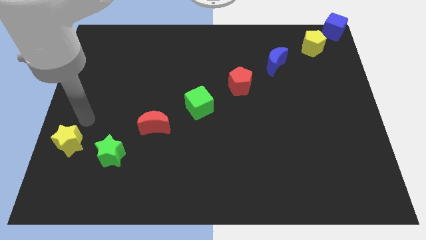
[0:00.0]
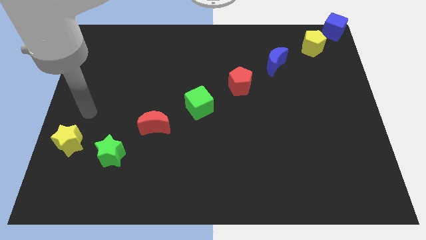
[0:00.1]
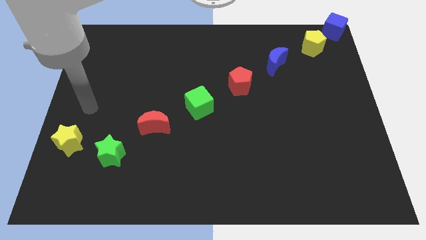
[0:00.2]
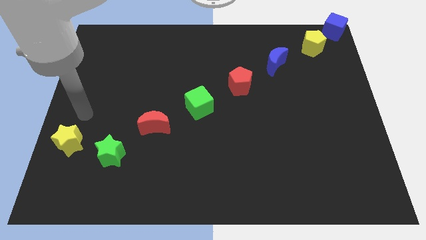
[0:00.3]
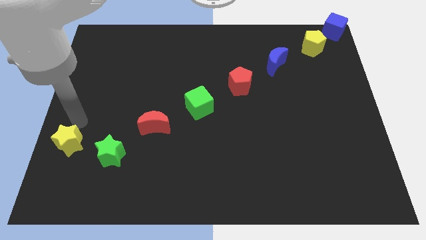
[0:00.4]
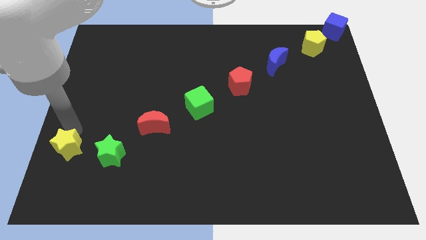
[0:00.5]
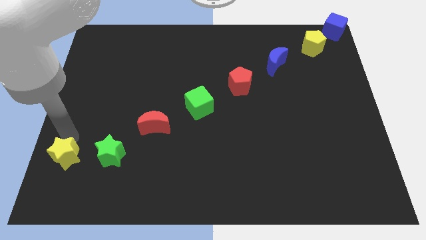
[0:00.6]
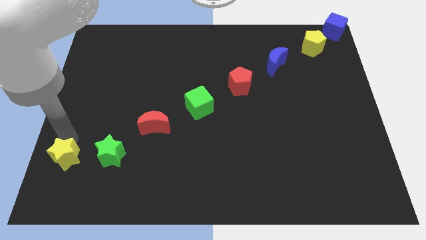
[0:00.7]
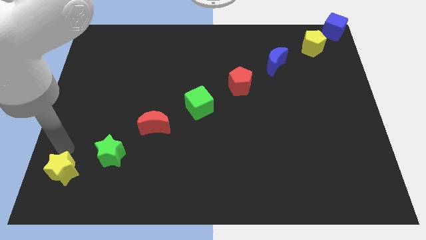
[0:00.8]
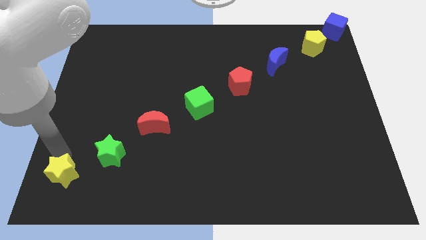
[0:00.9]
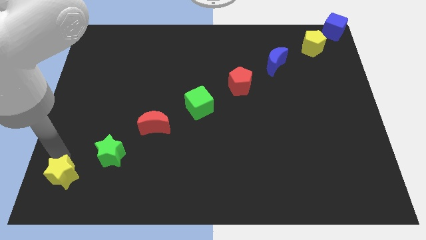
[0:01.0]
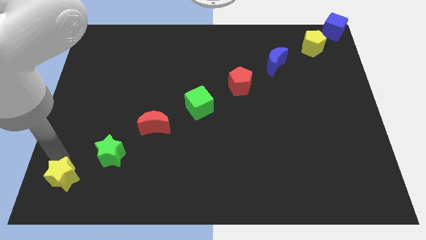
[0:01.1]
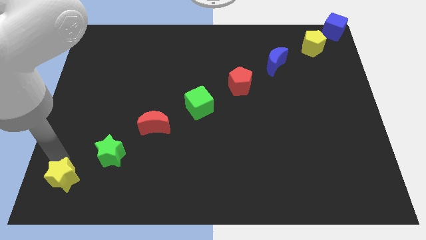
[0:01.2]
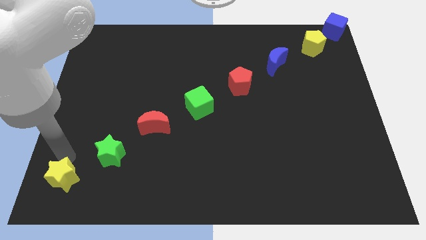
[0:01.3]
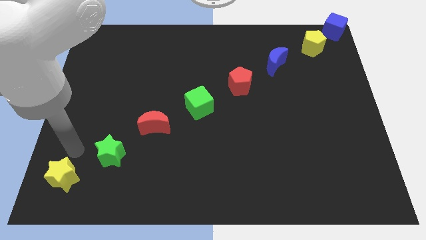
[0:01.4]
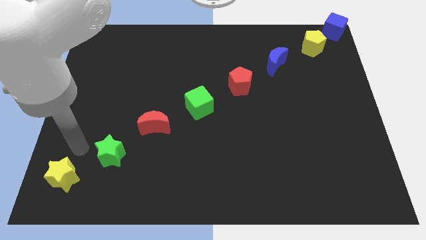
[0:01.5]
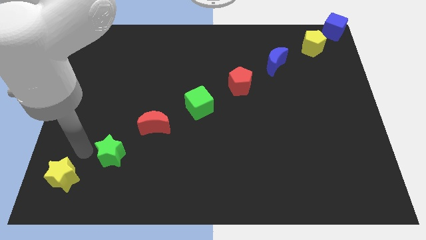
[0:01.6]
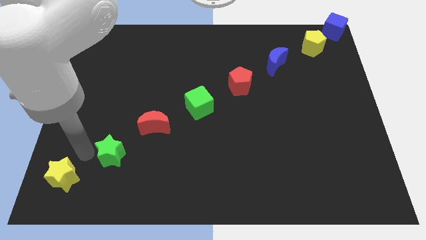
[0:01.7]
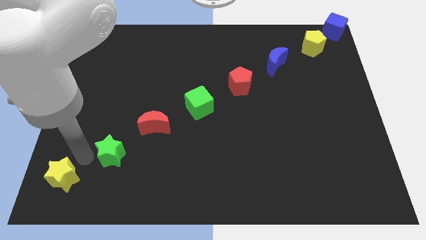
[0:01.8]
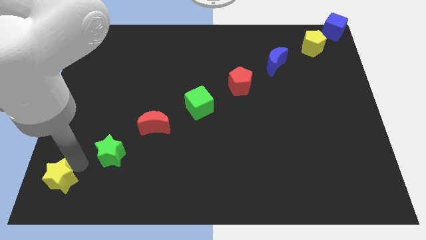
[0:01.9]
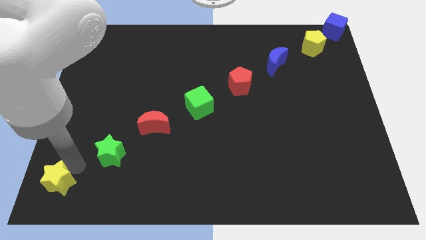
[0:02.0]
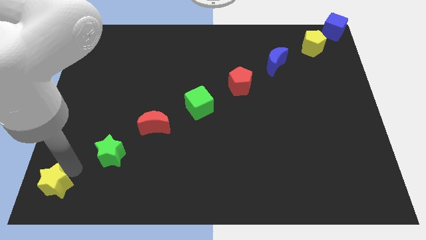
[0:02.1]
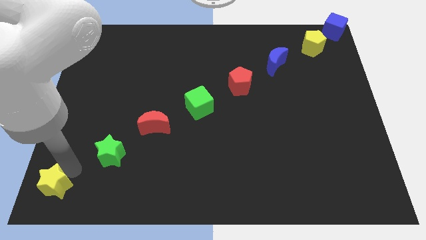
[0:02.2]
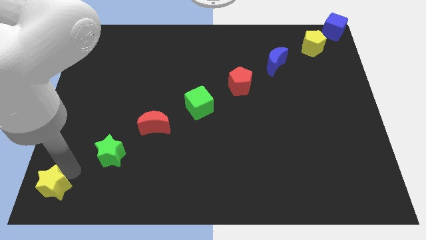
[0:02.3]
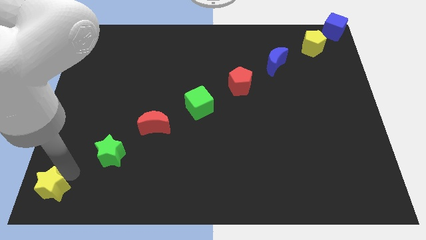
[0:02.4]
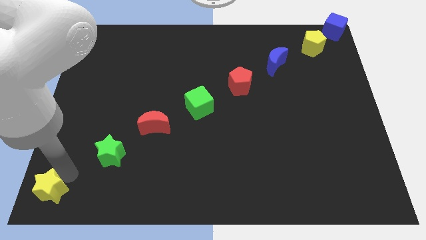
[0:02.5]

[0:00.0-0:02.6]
push the yellow star to the bottom left corner of the board

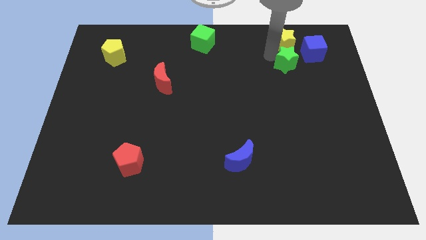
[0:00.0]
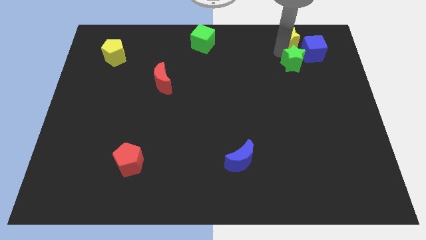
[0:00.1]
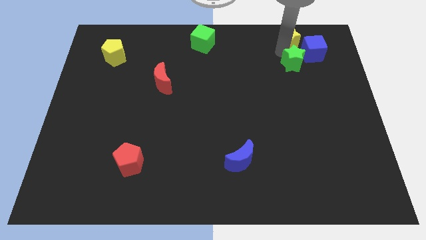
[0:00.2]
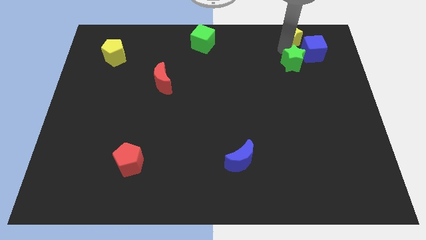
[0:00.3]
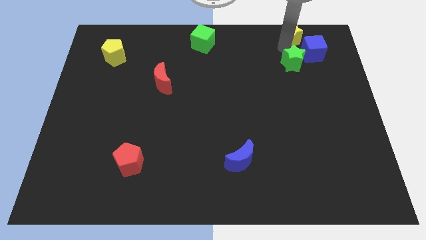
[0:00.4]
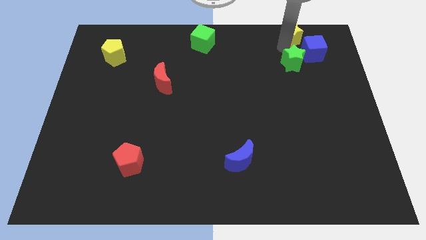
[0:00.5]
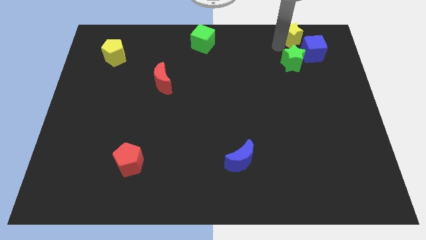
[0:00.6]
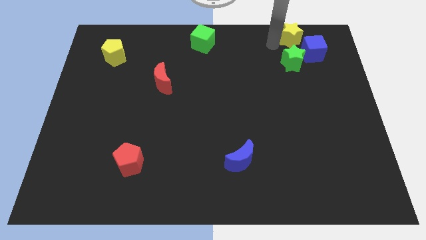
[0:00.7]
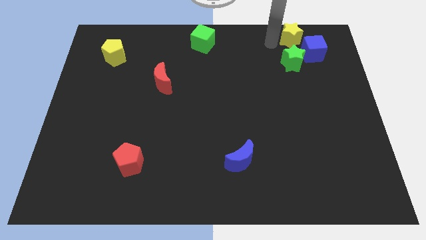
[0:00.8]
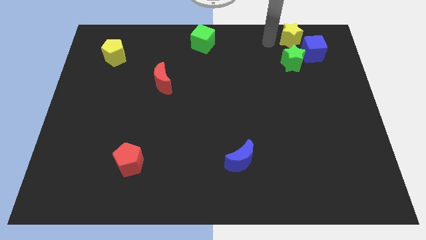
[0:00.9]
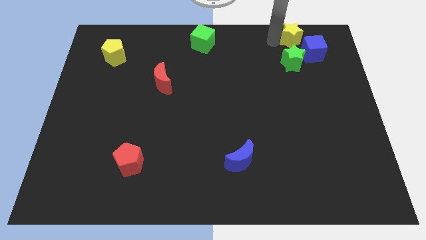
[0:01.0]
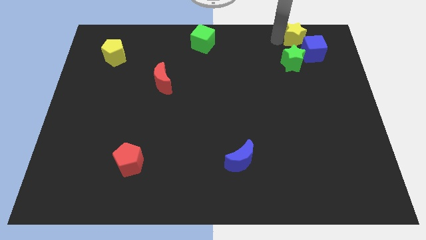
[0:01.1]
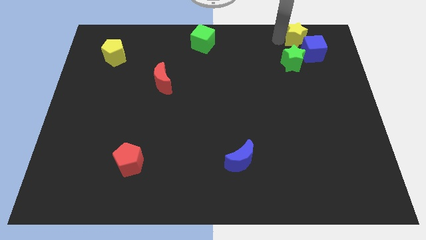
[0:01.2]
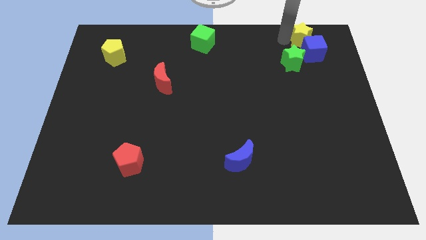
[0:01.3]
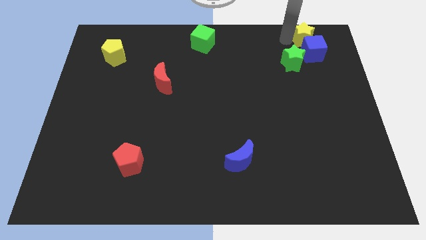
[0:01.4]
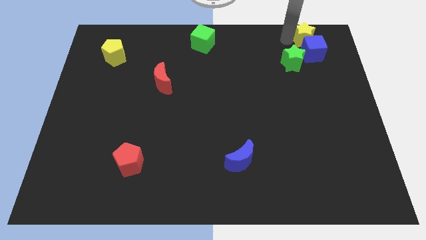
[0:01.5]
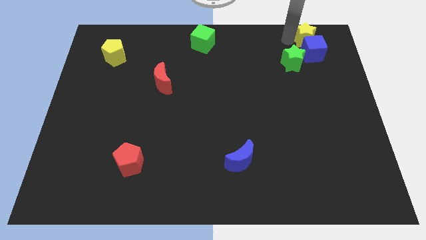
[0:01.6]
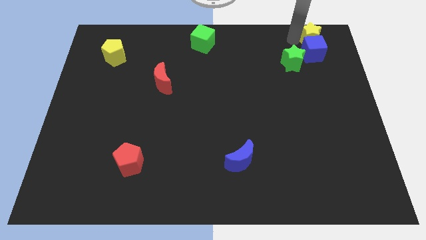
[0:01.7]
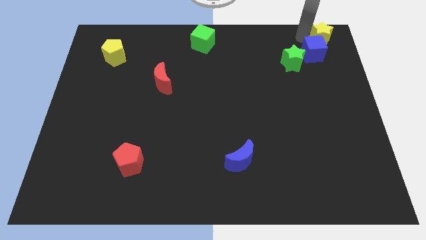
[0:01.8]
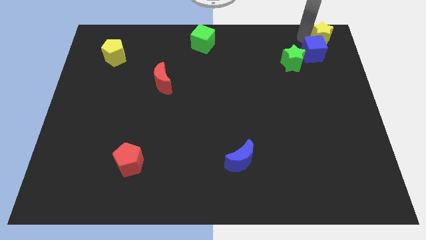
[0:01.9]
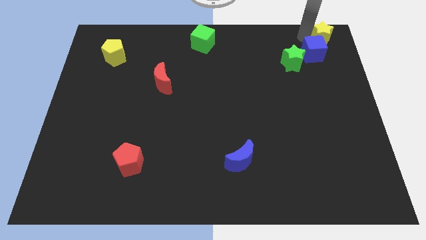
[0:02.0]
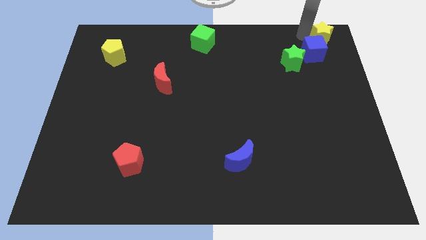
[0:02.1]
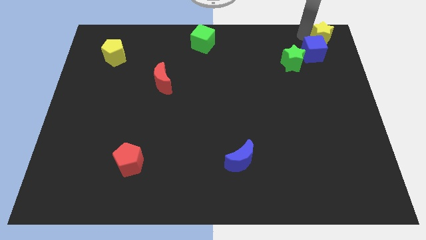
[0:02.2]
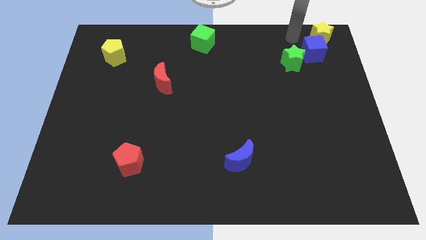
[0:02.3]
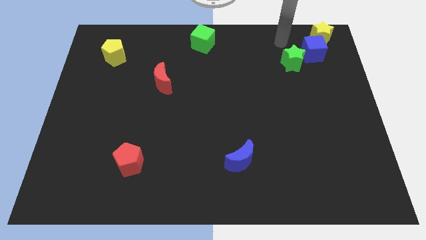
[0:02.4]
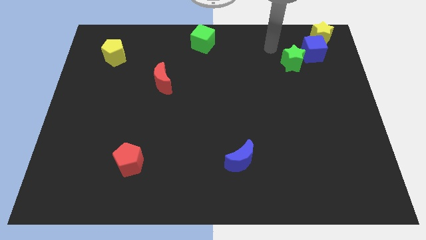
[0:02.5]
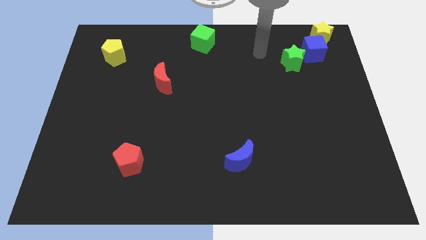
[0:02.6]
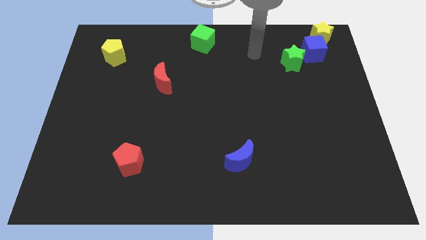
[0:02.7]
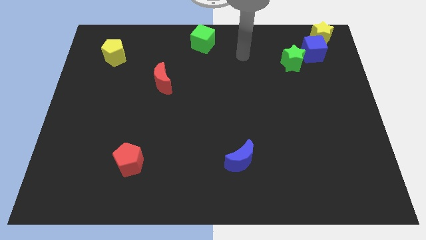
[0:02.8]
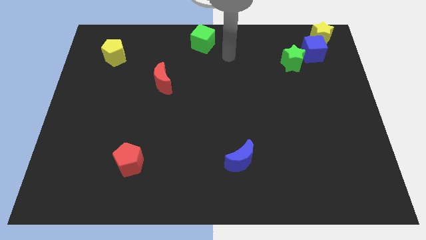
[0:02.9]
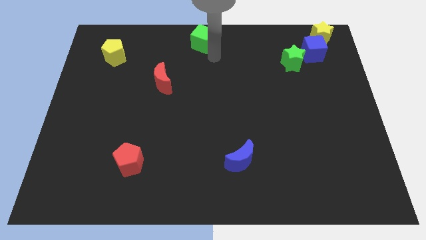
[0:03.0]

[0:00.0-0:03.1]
point your arm below green cube

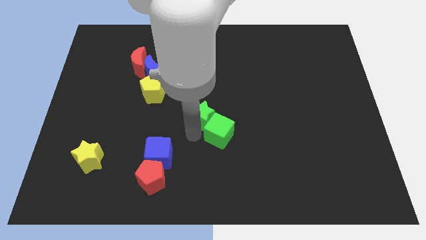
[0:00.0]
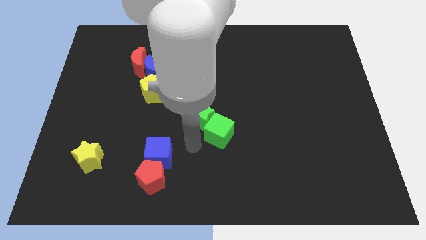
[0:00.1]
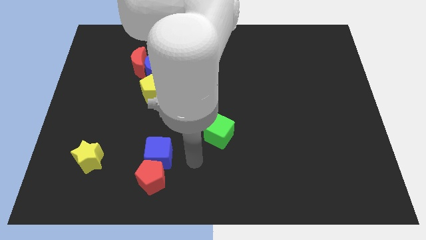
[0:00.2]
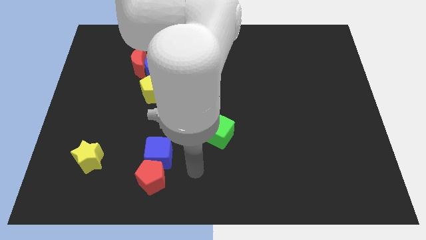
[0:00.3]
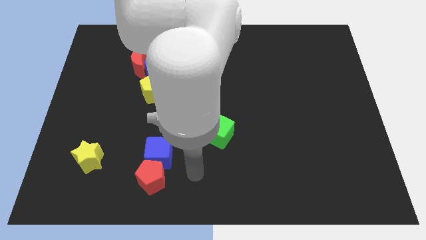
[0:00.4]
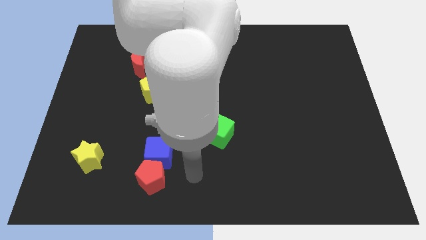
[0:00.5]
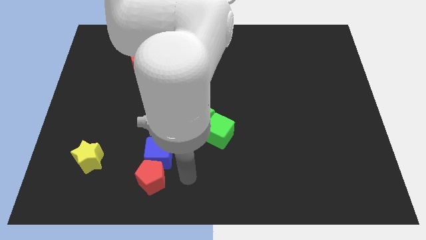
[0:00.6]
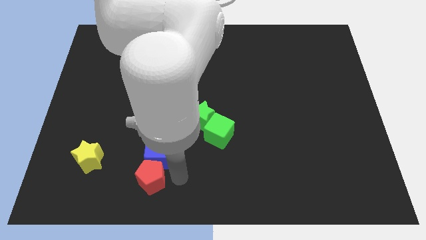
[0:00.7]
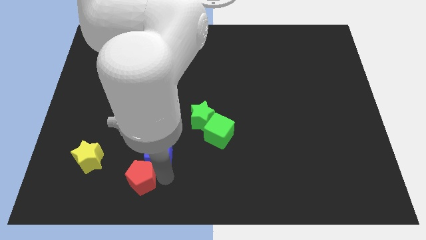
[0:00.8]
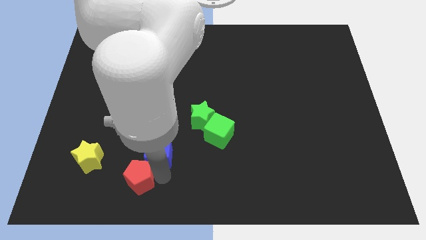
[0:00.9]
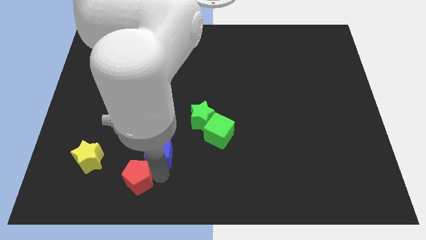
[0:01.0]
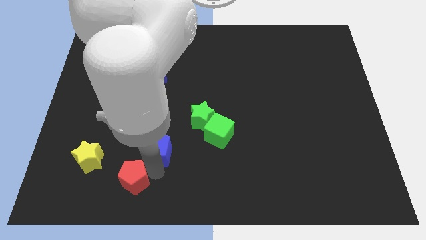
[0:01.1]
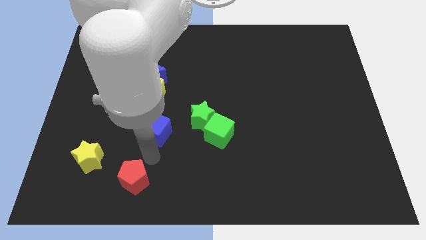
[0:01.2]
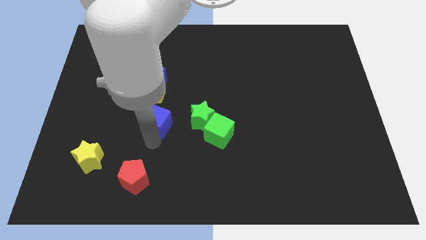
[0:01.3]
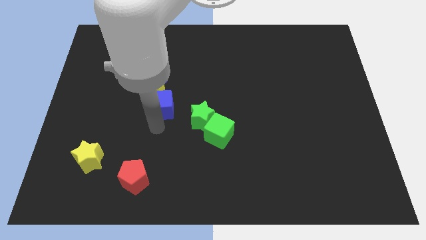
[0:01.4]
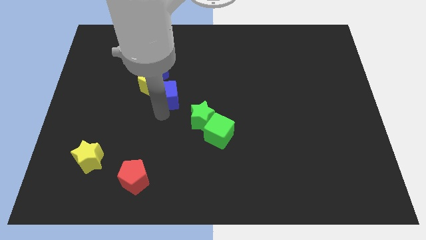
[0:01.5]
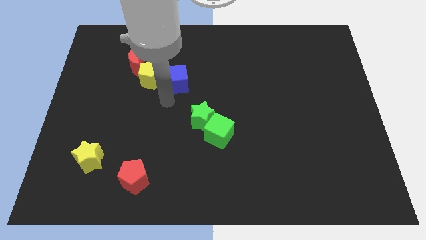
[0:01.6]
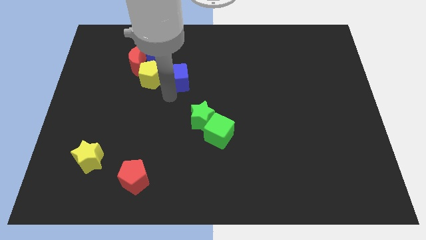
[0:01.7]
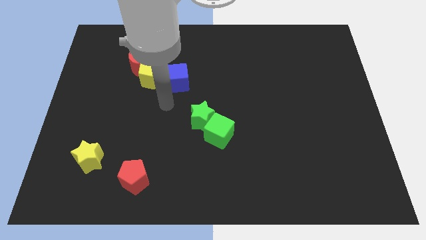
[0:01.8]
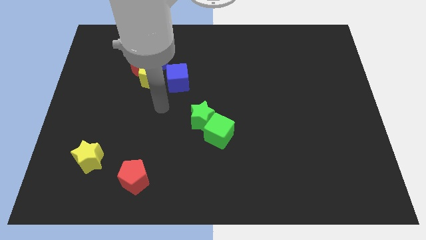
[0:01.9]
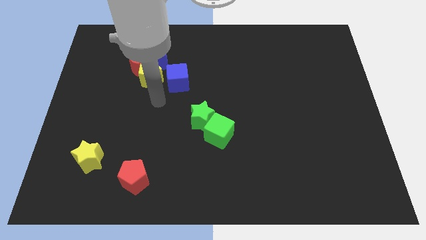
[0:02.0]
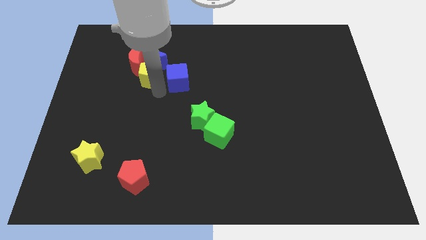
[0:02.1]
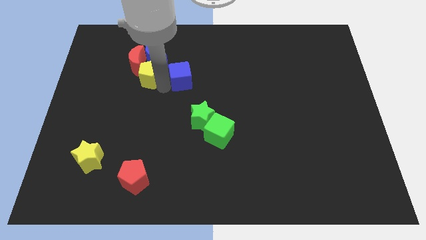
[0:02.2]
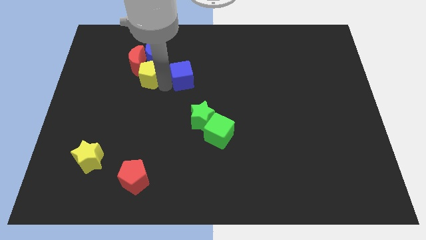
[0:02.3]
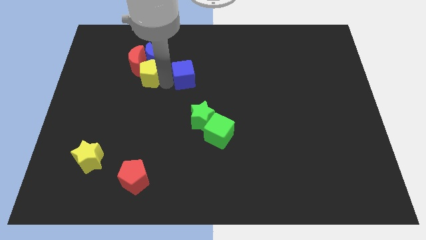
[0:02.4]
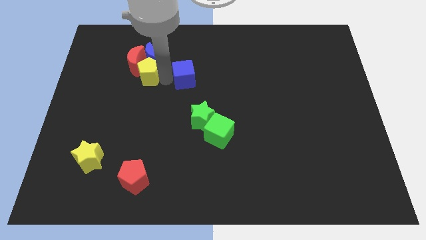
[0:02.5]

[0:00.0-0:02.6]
separate blue cube from red pentagon

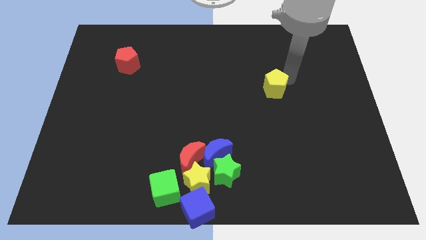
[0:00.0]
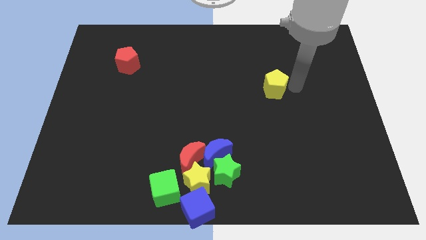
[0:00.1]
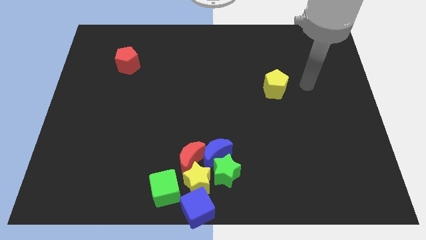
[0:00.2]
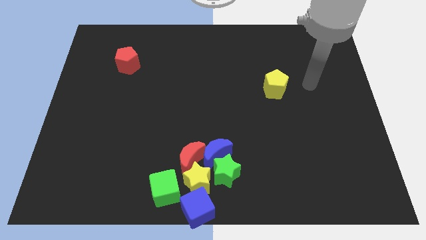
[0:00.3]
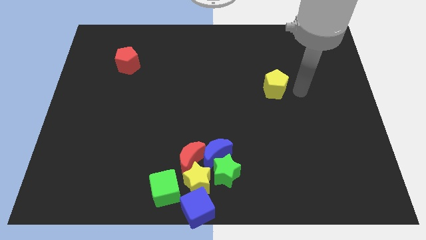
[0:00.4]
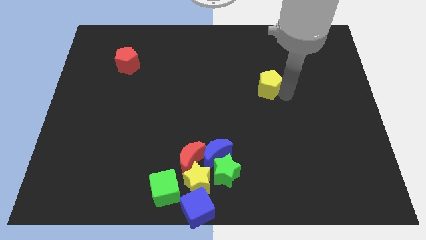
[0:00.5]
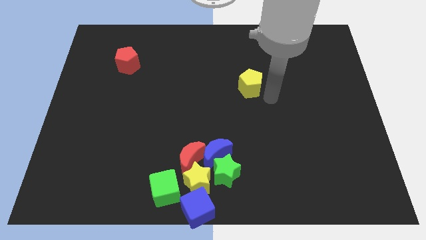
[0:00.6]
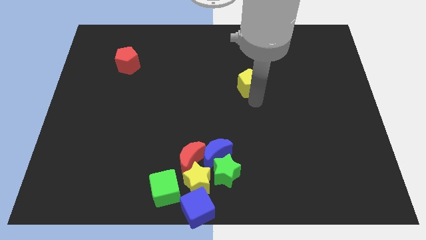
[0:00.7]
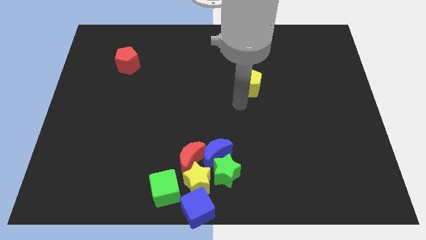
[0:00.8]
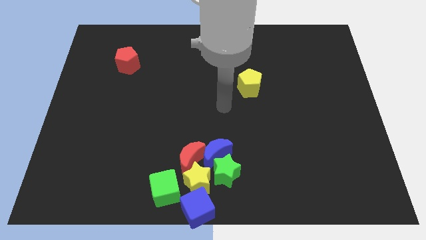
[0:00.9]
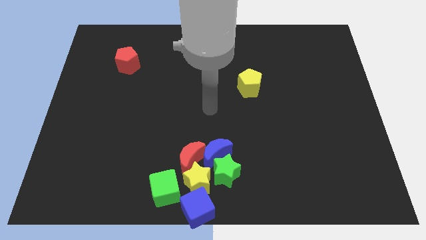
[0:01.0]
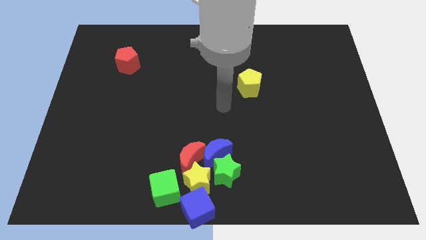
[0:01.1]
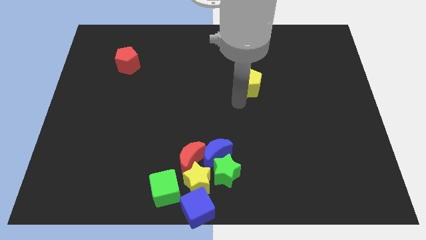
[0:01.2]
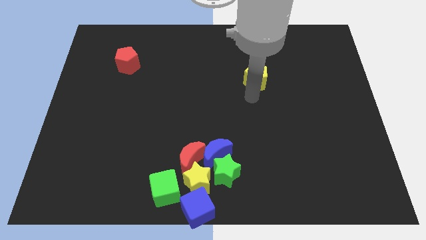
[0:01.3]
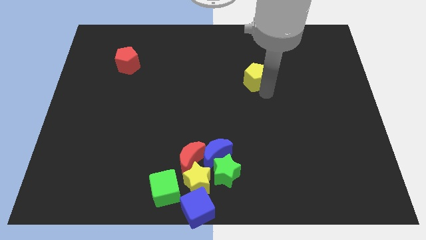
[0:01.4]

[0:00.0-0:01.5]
push the yellow pentagon to the left
